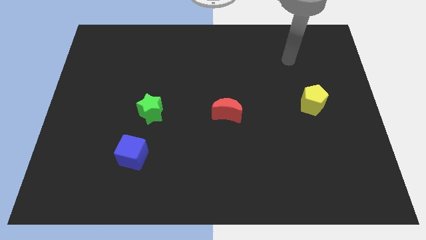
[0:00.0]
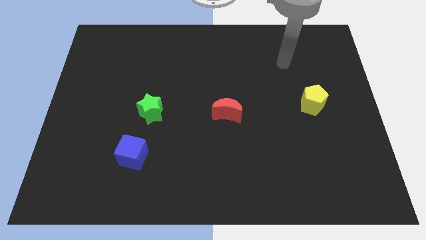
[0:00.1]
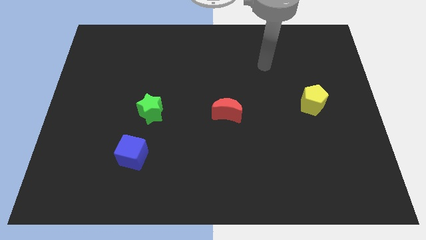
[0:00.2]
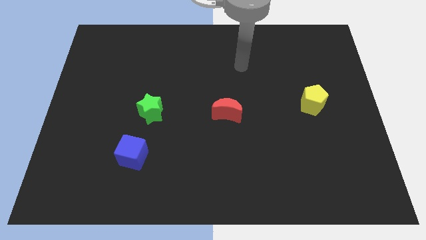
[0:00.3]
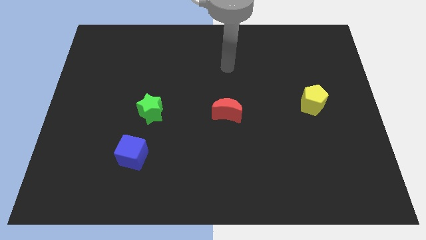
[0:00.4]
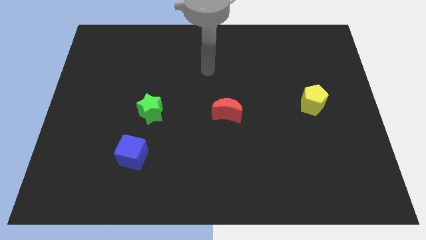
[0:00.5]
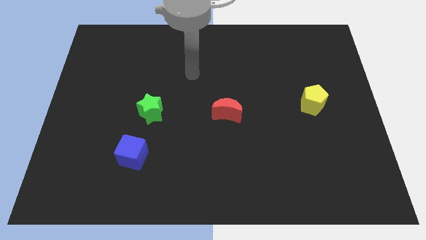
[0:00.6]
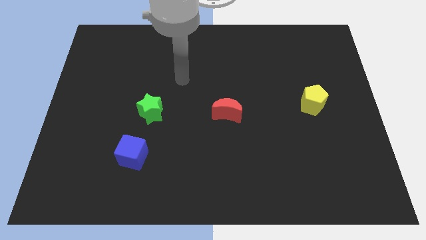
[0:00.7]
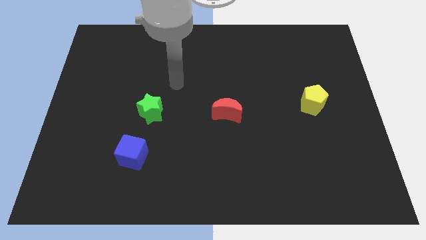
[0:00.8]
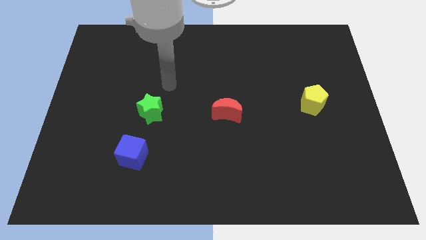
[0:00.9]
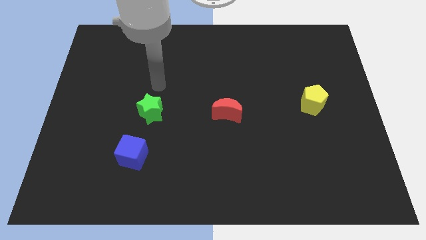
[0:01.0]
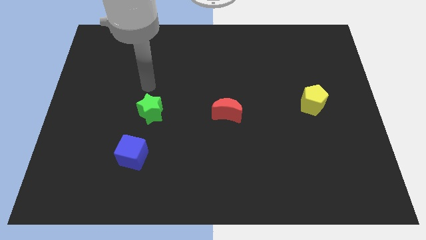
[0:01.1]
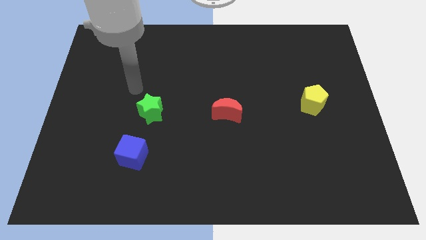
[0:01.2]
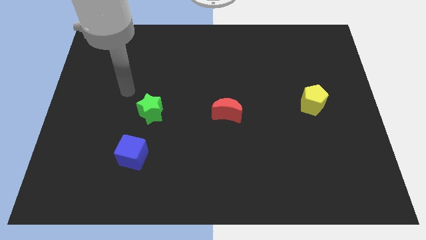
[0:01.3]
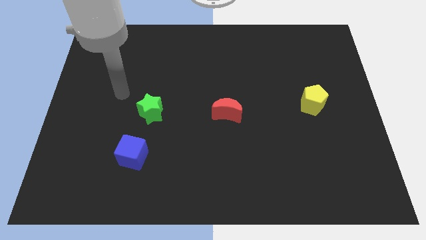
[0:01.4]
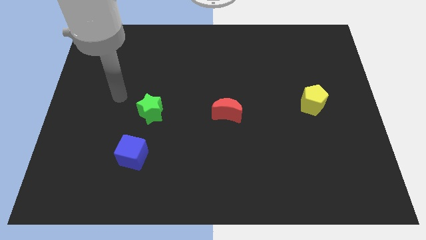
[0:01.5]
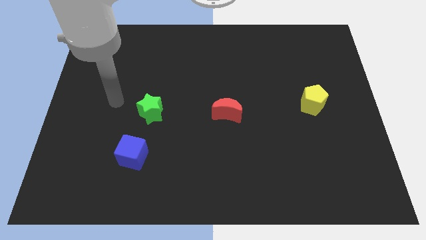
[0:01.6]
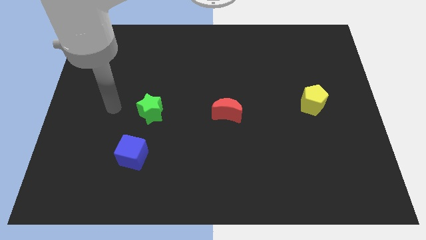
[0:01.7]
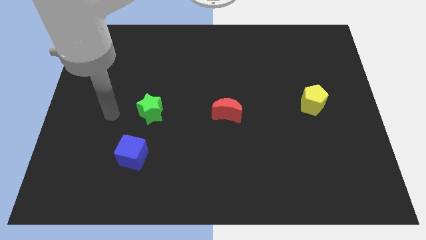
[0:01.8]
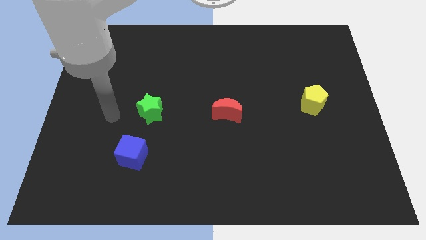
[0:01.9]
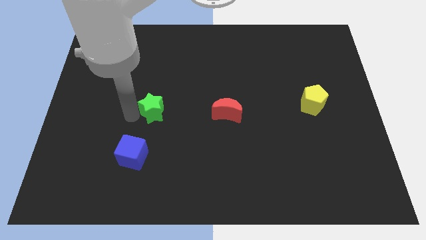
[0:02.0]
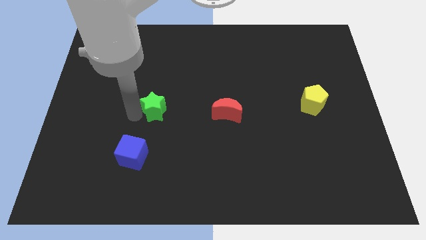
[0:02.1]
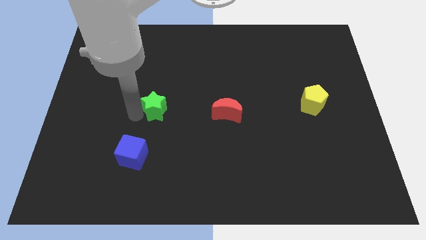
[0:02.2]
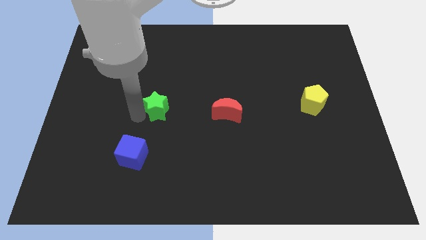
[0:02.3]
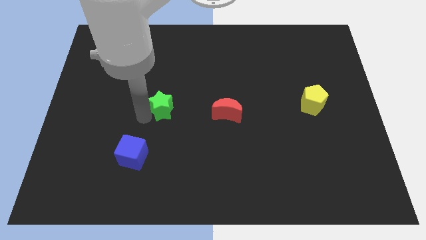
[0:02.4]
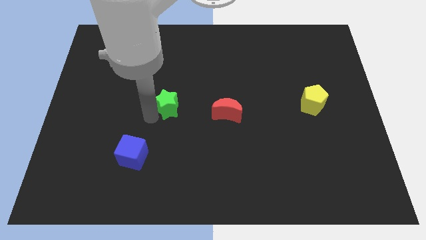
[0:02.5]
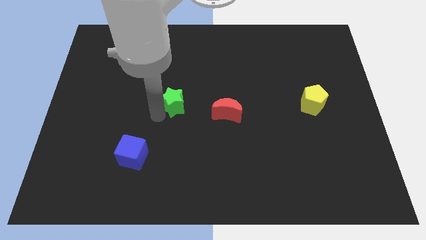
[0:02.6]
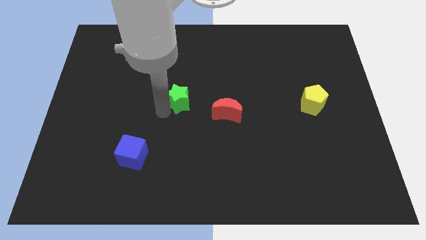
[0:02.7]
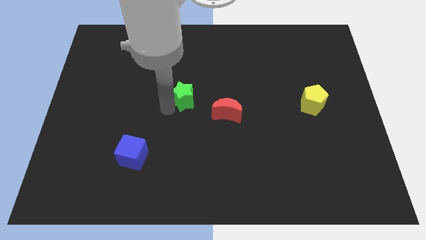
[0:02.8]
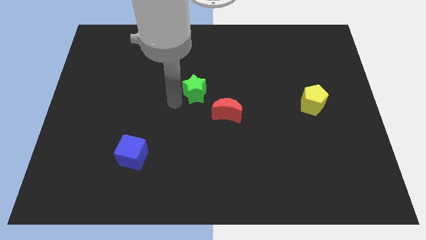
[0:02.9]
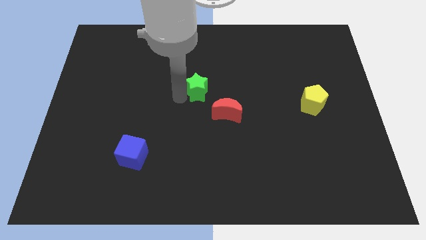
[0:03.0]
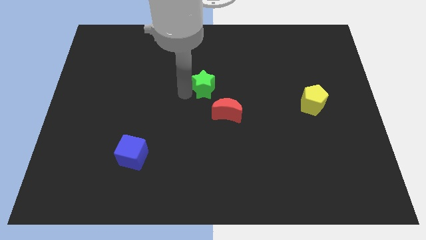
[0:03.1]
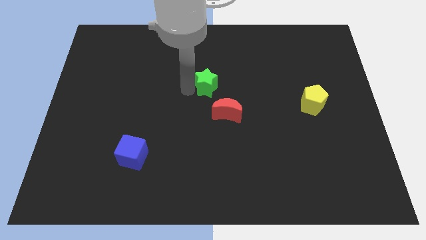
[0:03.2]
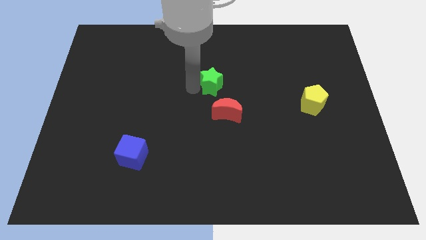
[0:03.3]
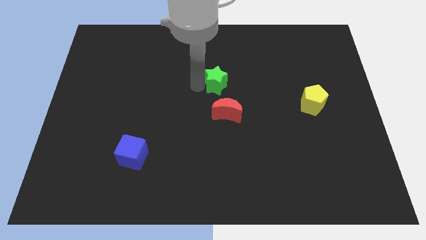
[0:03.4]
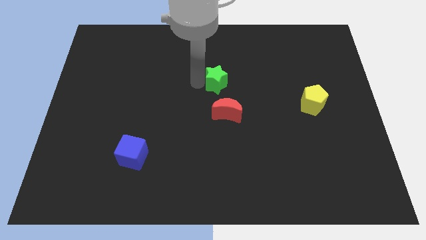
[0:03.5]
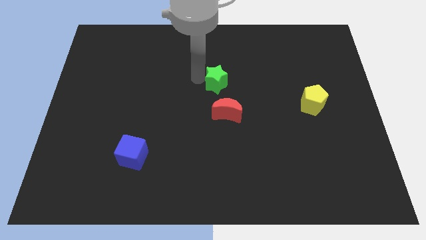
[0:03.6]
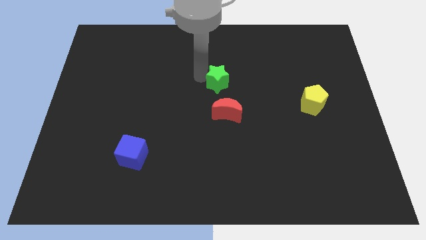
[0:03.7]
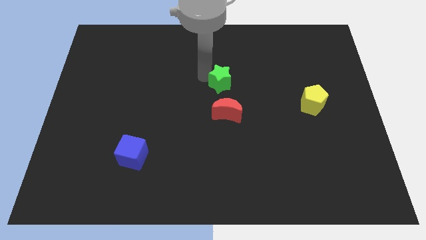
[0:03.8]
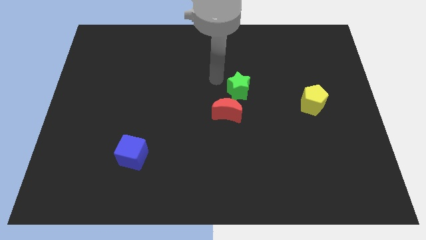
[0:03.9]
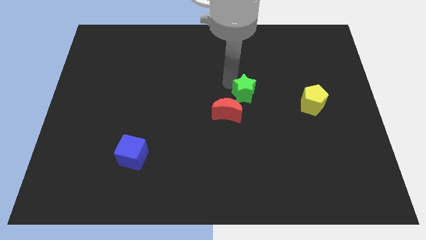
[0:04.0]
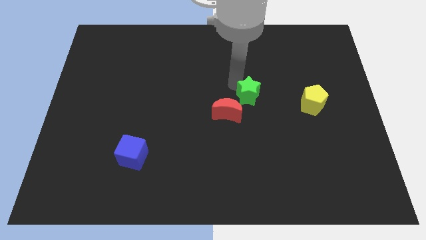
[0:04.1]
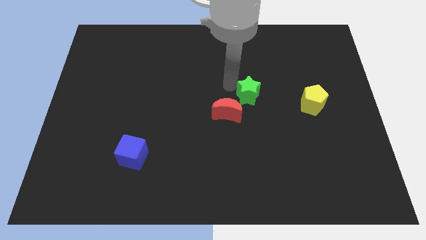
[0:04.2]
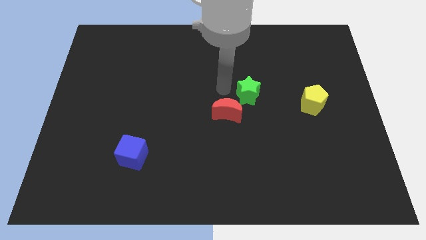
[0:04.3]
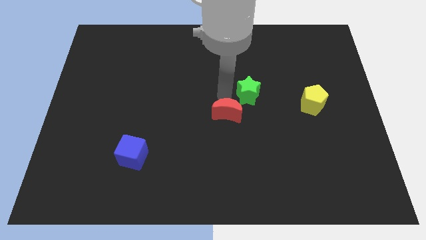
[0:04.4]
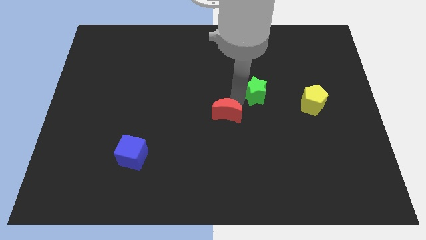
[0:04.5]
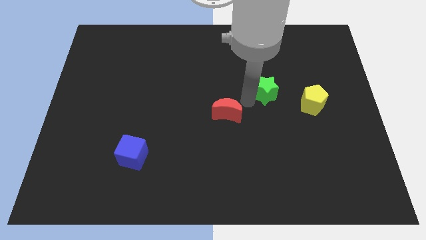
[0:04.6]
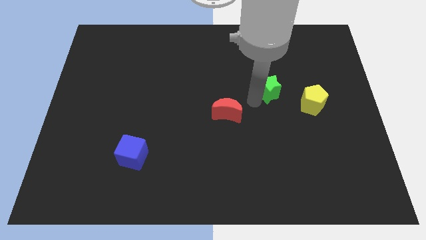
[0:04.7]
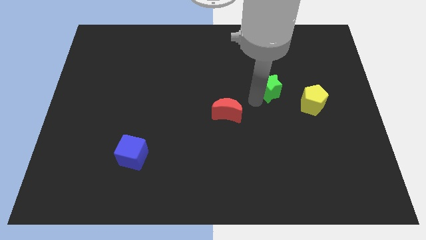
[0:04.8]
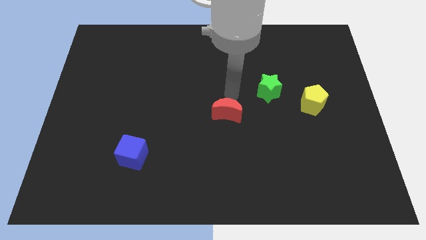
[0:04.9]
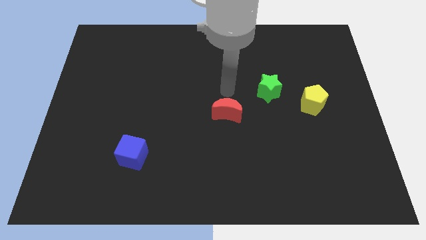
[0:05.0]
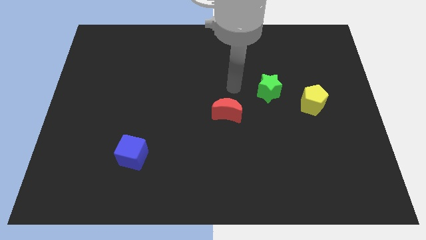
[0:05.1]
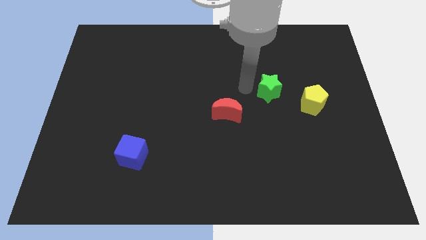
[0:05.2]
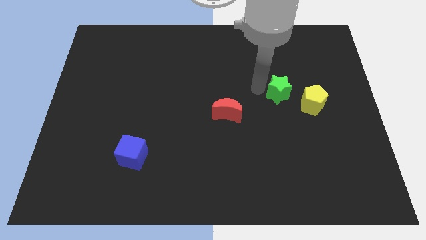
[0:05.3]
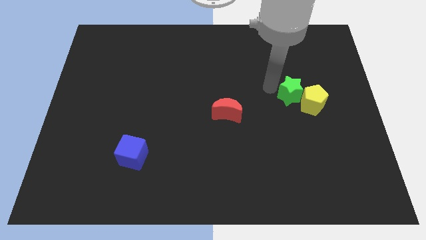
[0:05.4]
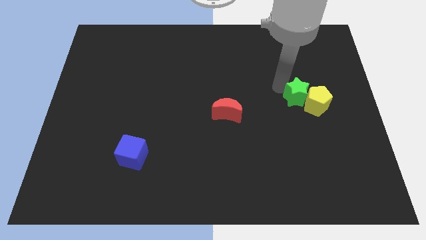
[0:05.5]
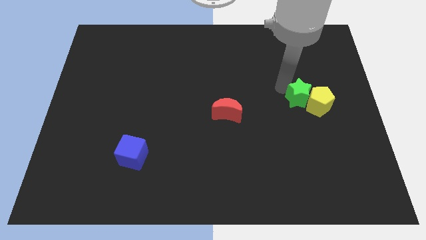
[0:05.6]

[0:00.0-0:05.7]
move the green block to the yellow block

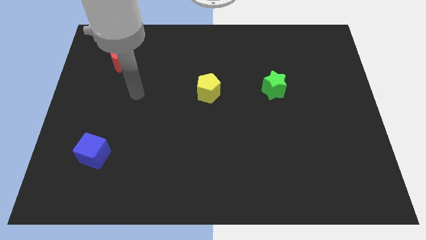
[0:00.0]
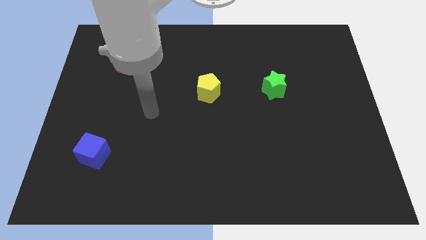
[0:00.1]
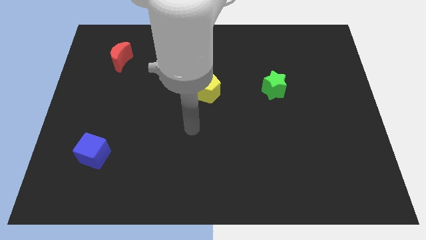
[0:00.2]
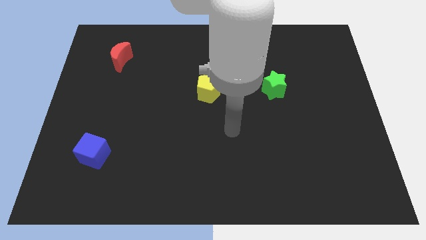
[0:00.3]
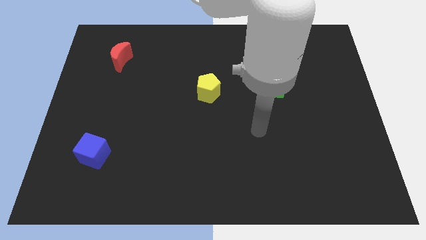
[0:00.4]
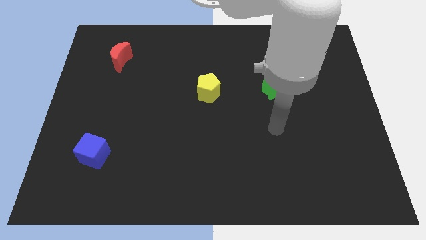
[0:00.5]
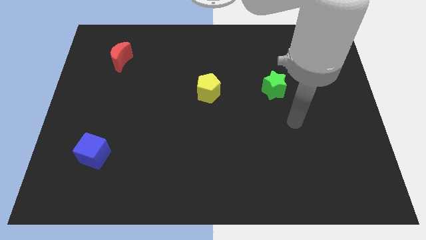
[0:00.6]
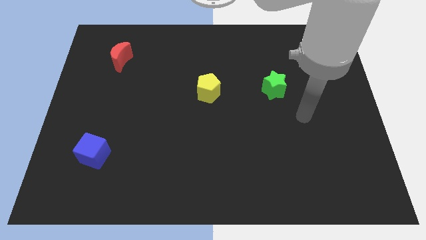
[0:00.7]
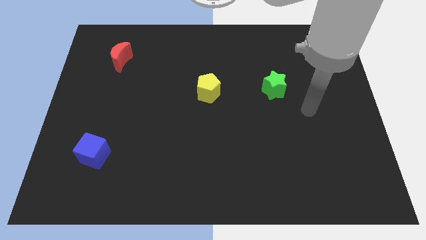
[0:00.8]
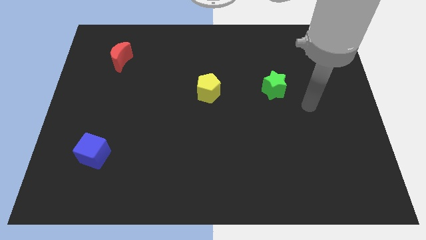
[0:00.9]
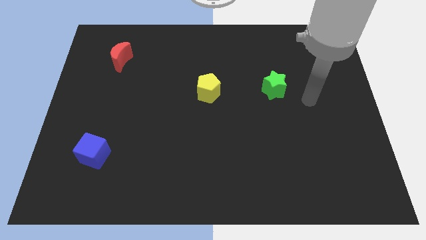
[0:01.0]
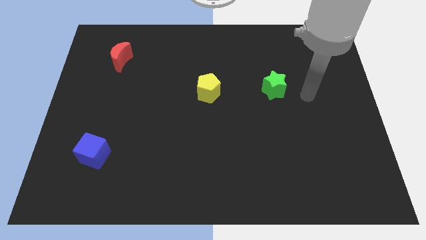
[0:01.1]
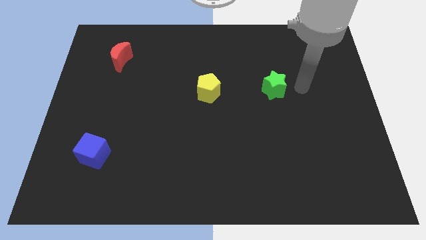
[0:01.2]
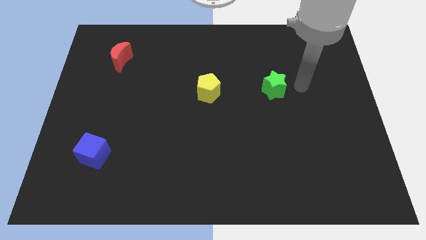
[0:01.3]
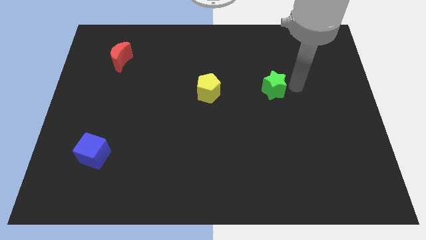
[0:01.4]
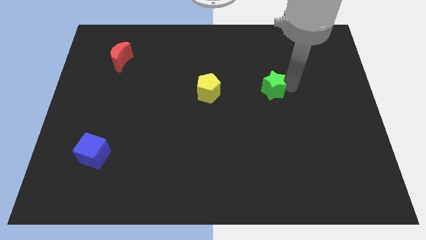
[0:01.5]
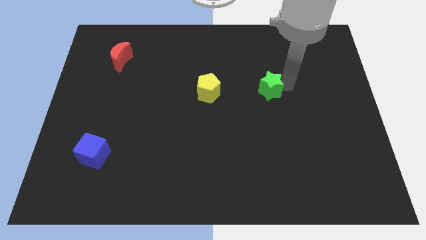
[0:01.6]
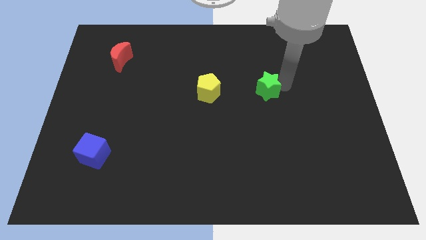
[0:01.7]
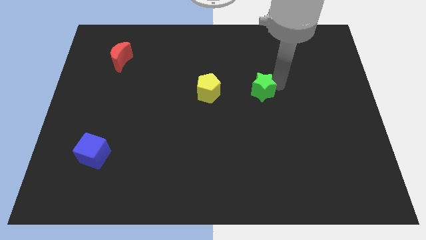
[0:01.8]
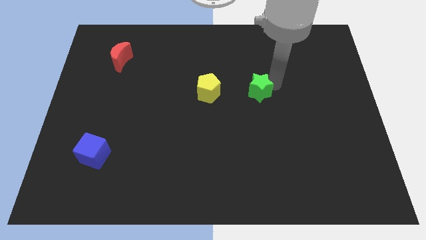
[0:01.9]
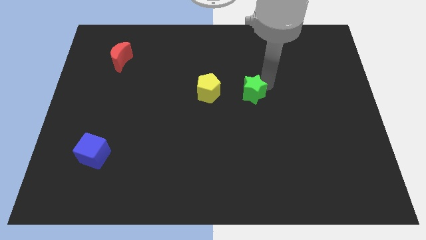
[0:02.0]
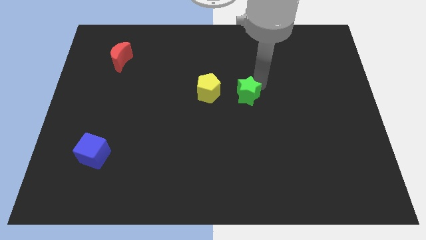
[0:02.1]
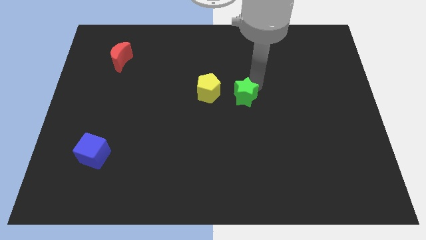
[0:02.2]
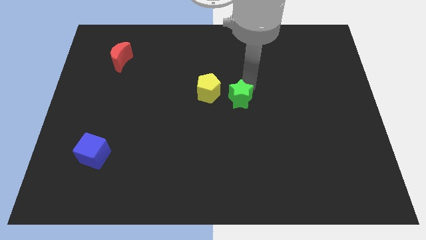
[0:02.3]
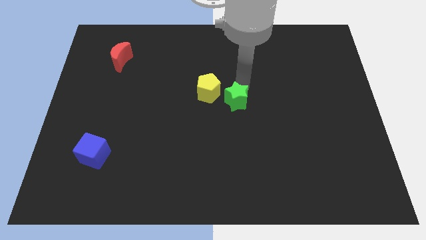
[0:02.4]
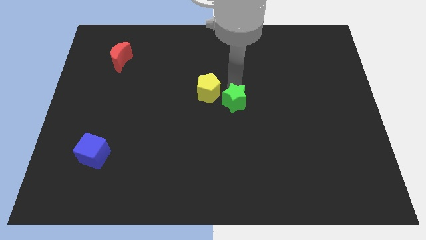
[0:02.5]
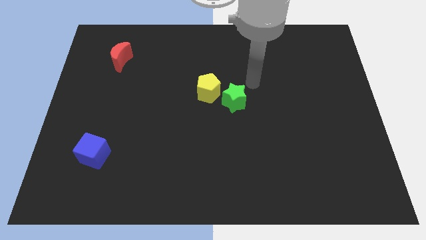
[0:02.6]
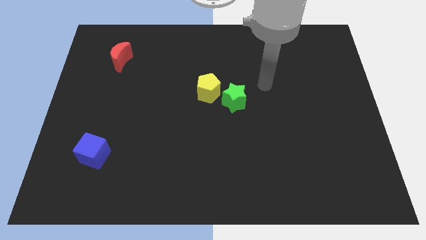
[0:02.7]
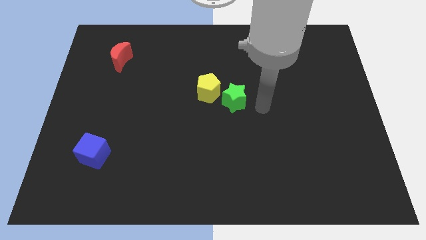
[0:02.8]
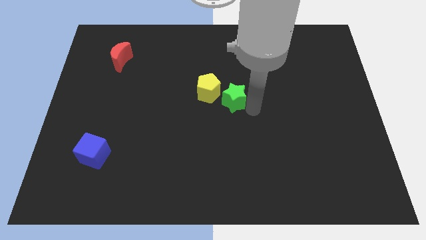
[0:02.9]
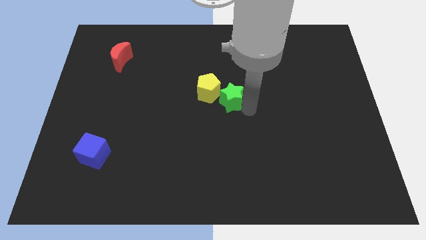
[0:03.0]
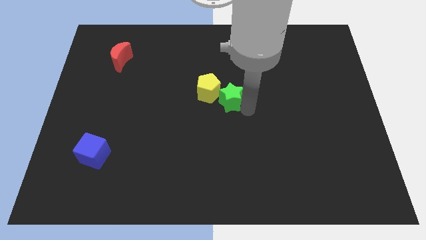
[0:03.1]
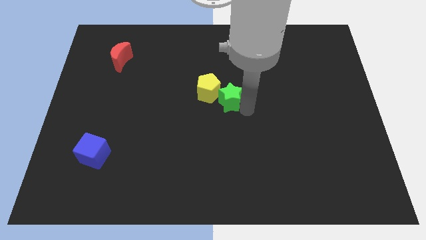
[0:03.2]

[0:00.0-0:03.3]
move the green star next to the pentagon
